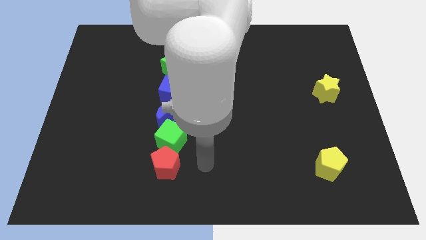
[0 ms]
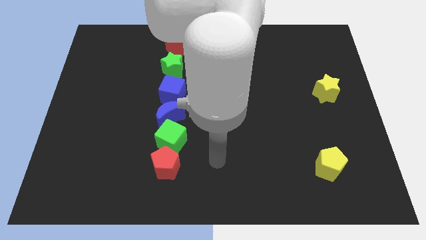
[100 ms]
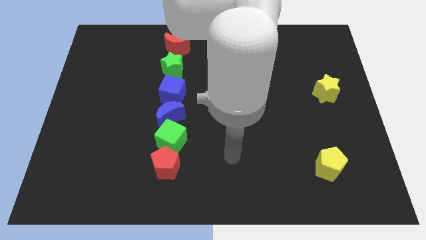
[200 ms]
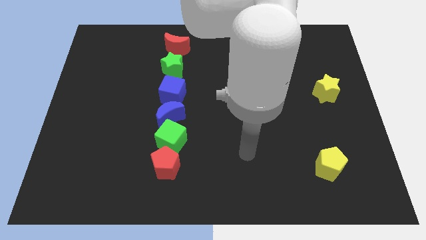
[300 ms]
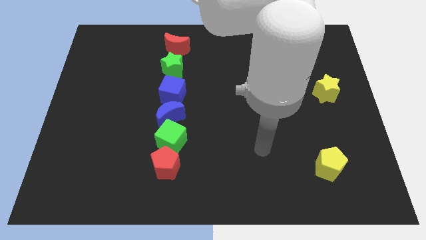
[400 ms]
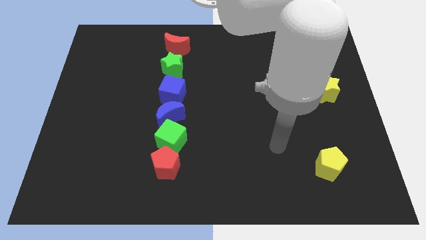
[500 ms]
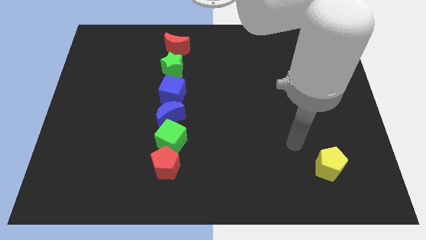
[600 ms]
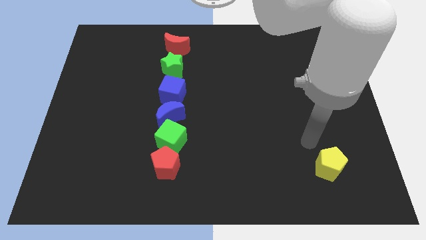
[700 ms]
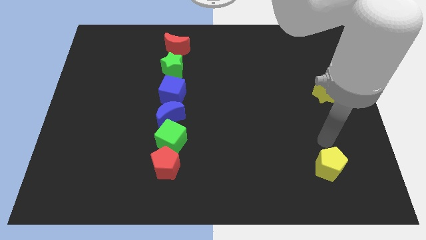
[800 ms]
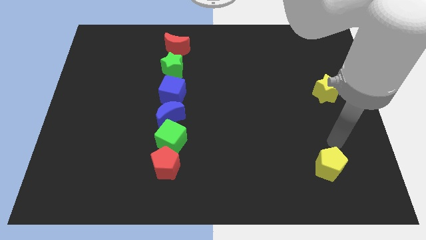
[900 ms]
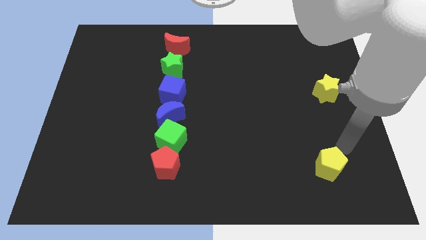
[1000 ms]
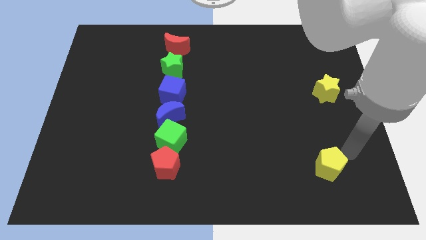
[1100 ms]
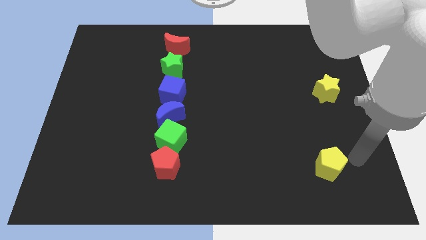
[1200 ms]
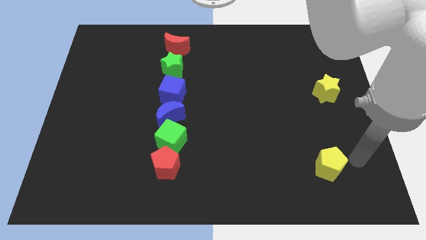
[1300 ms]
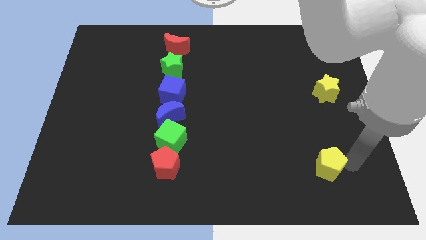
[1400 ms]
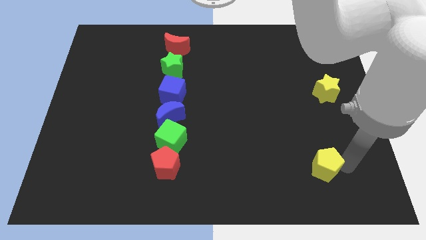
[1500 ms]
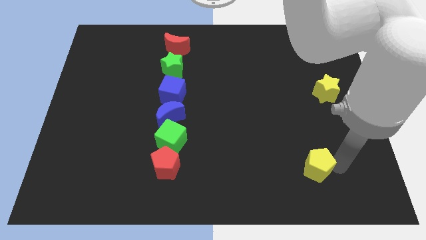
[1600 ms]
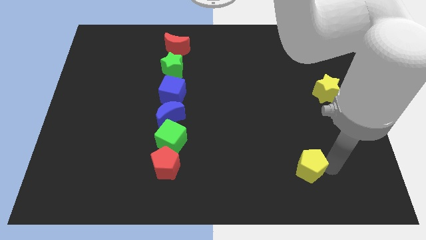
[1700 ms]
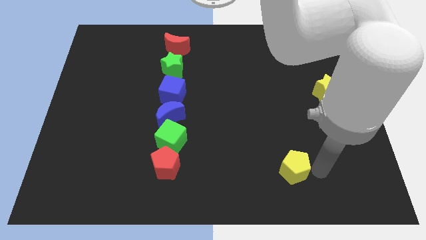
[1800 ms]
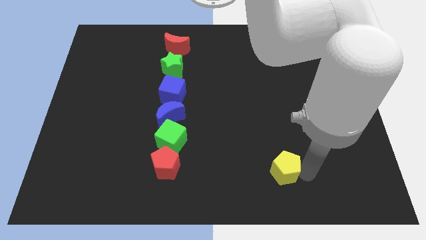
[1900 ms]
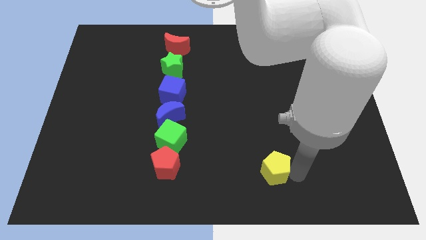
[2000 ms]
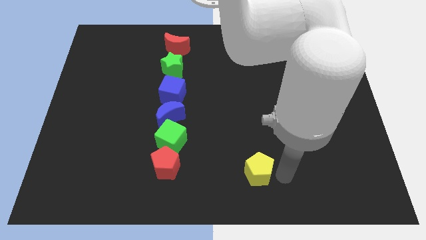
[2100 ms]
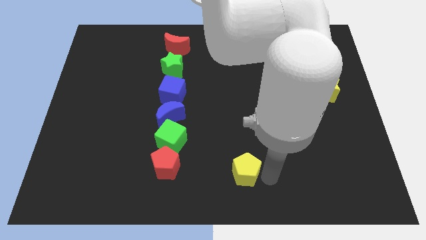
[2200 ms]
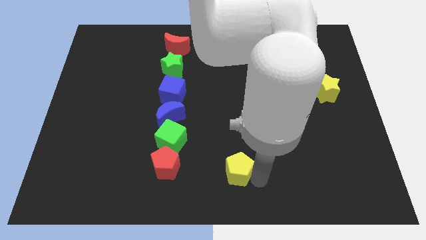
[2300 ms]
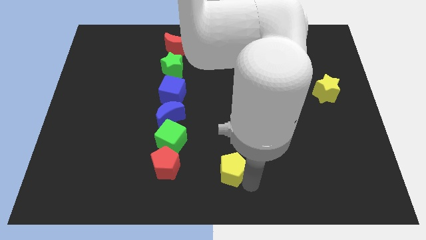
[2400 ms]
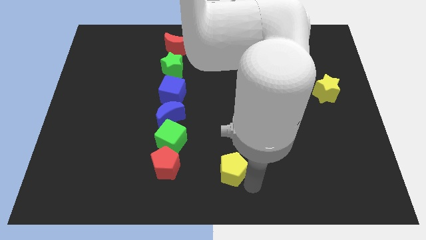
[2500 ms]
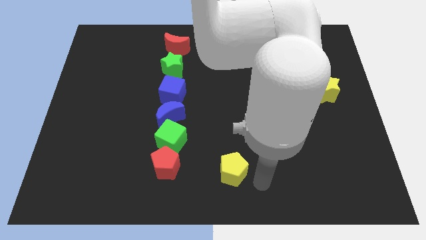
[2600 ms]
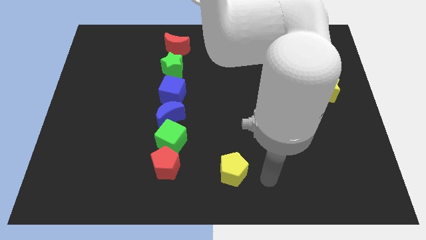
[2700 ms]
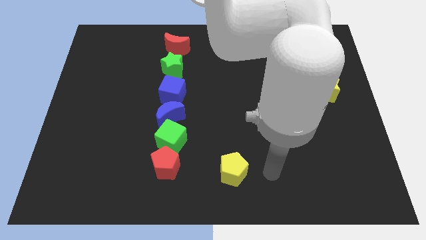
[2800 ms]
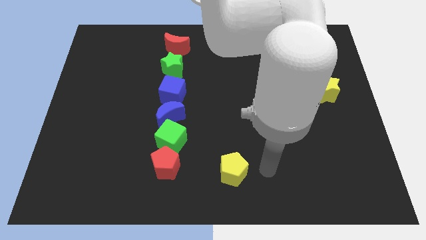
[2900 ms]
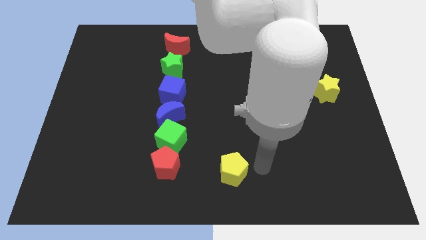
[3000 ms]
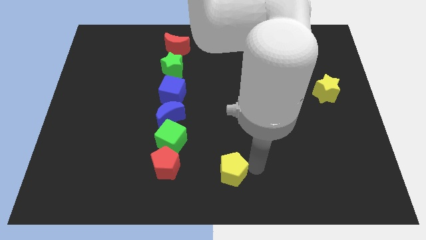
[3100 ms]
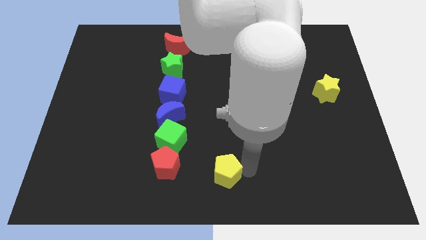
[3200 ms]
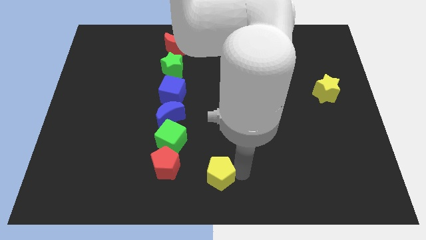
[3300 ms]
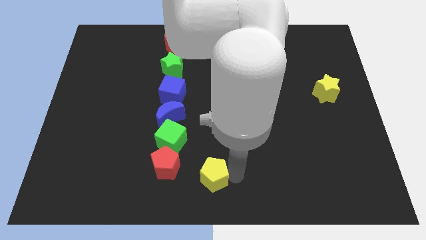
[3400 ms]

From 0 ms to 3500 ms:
push the yellow pentagon to the left of the board

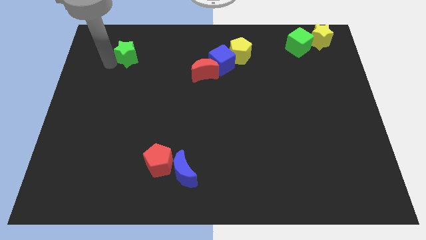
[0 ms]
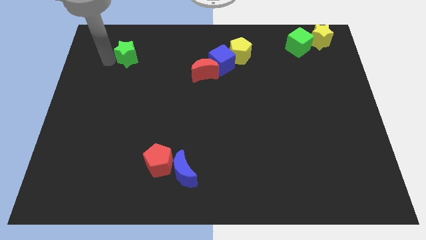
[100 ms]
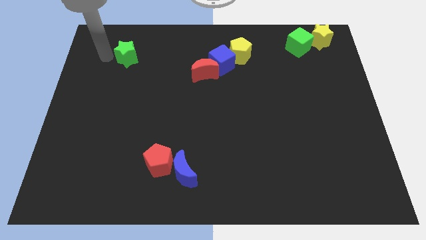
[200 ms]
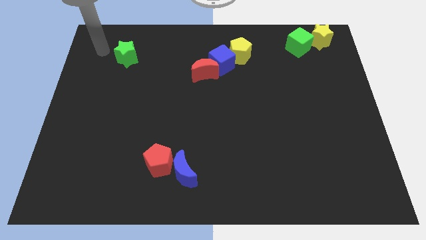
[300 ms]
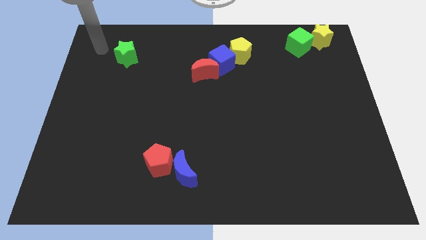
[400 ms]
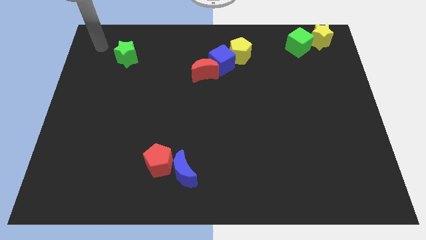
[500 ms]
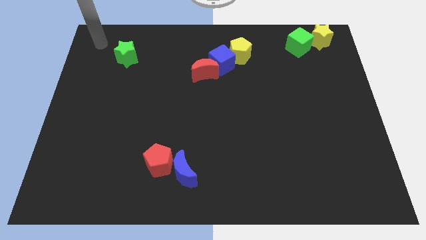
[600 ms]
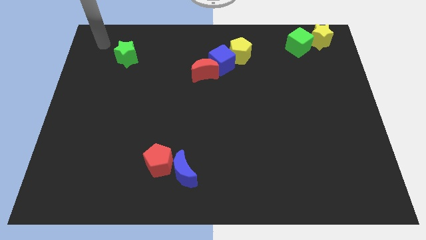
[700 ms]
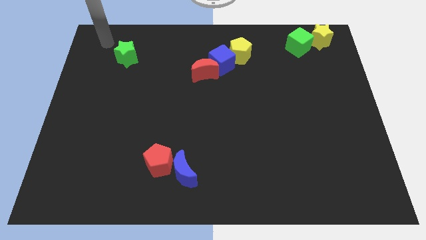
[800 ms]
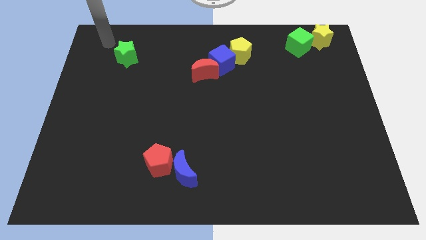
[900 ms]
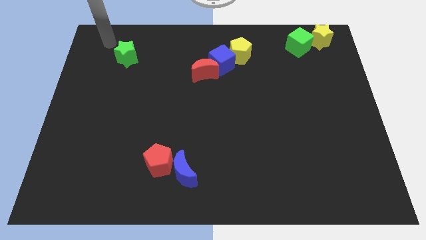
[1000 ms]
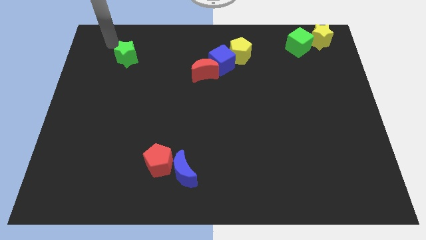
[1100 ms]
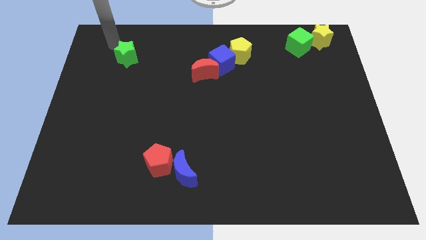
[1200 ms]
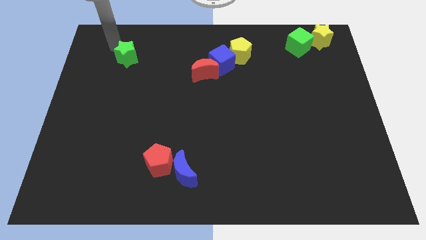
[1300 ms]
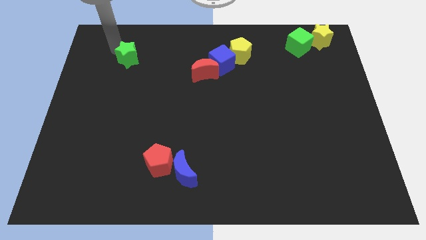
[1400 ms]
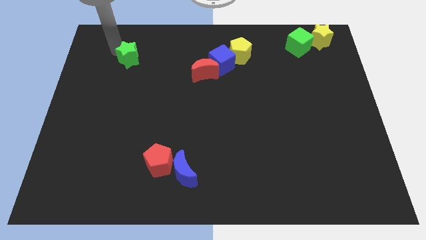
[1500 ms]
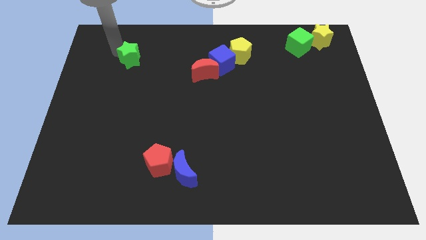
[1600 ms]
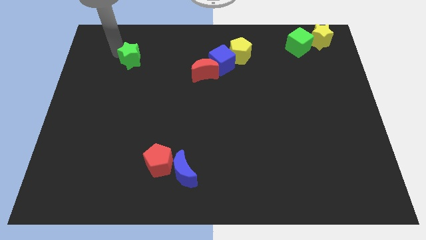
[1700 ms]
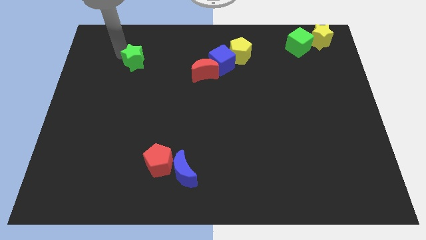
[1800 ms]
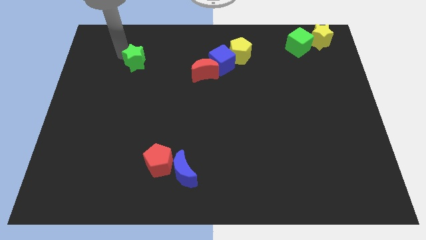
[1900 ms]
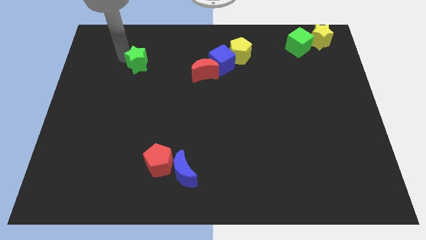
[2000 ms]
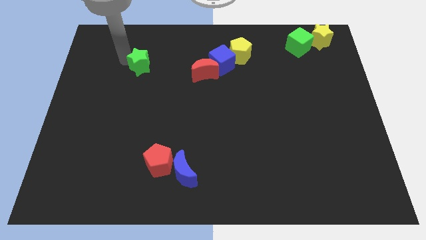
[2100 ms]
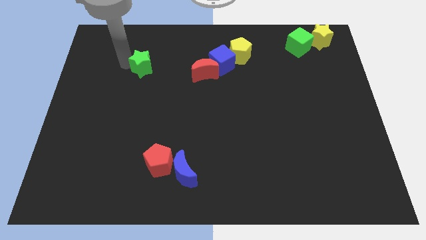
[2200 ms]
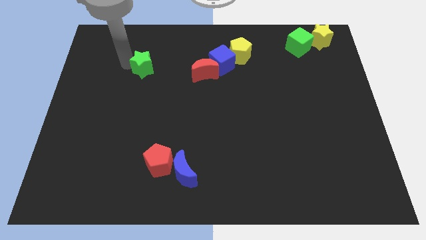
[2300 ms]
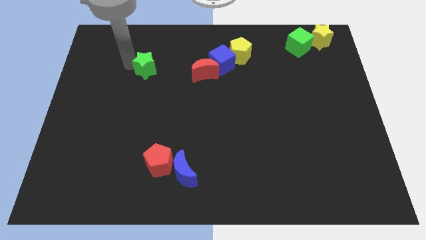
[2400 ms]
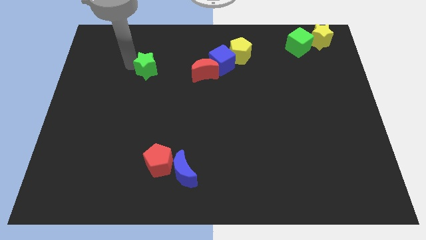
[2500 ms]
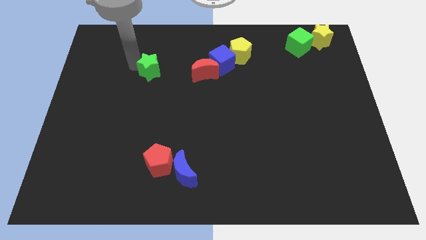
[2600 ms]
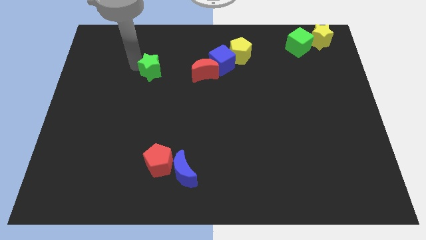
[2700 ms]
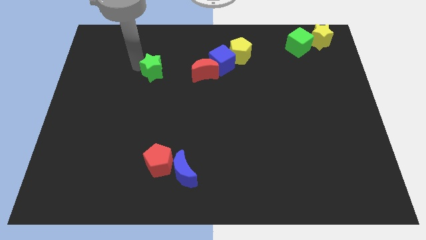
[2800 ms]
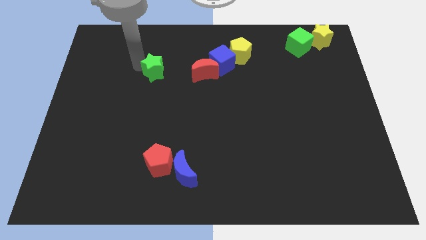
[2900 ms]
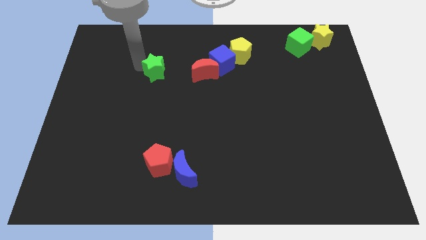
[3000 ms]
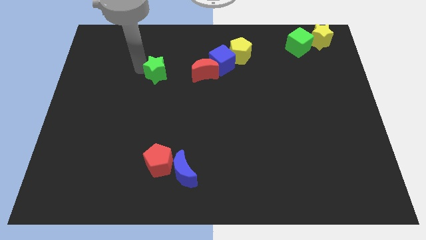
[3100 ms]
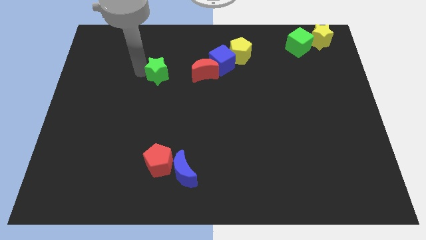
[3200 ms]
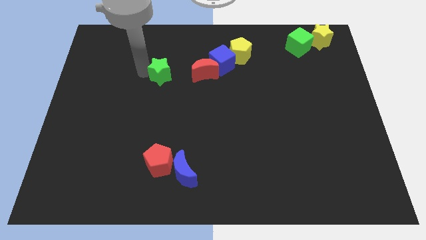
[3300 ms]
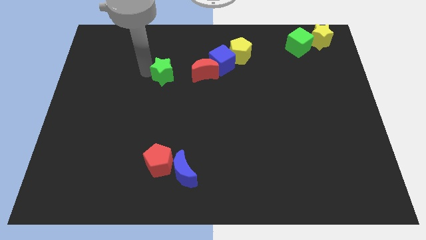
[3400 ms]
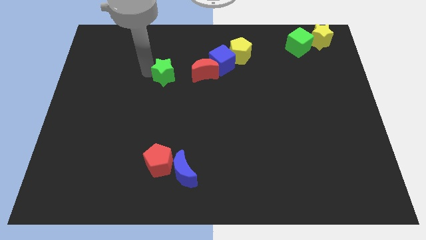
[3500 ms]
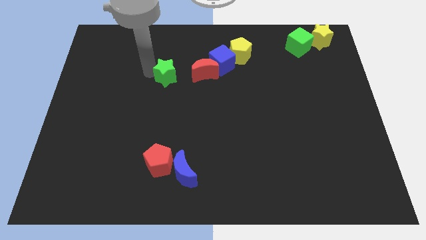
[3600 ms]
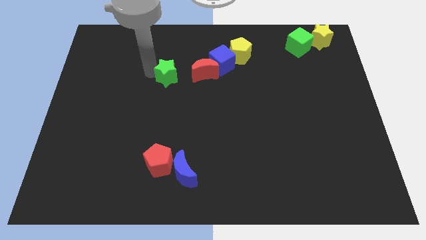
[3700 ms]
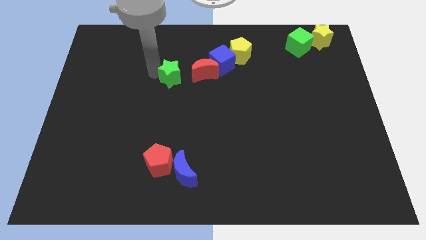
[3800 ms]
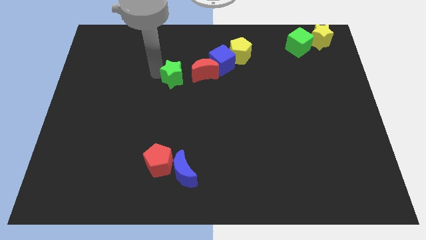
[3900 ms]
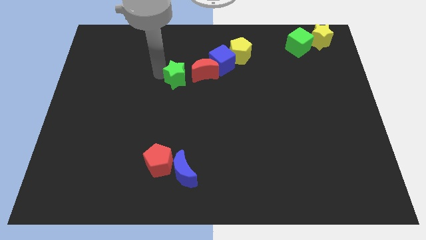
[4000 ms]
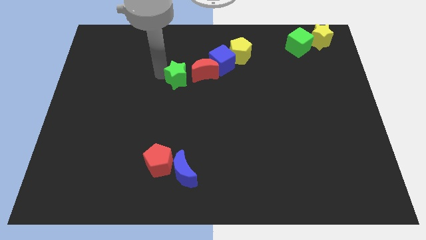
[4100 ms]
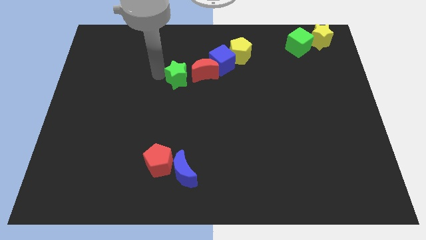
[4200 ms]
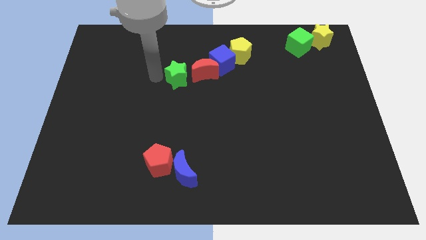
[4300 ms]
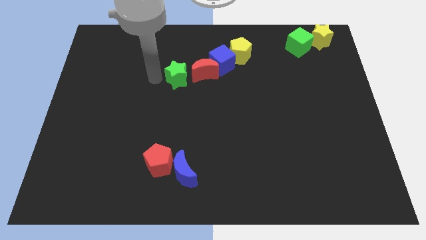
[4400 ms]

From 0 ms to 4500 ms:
push the green star to the left of the red crescent

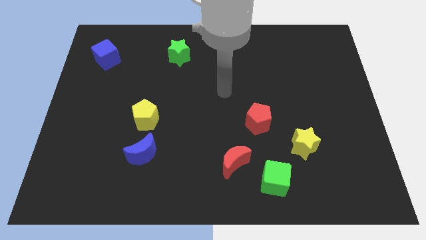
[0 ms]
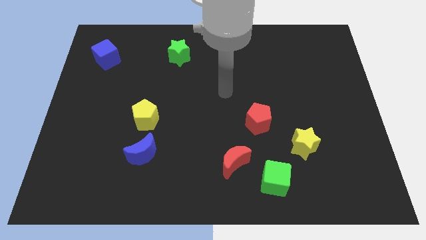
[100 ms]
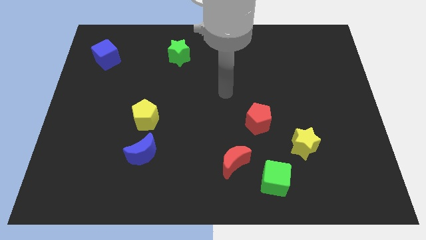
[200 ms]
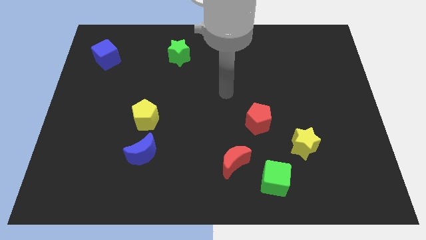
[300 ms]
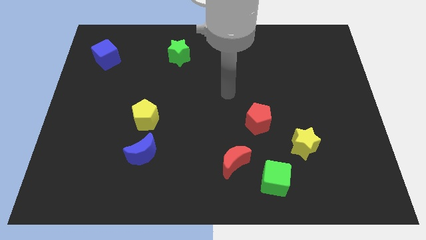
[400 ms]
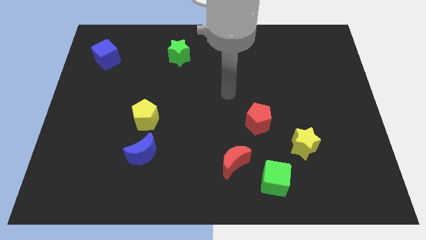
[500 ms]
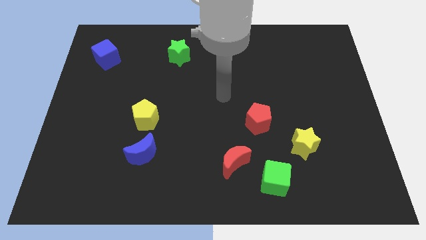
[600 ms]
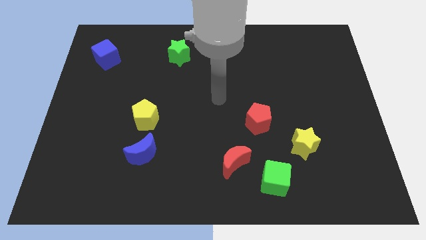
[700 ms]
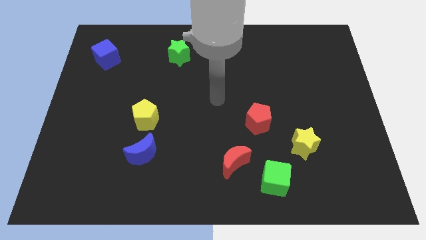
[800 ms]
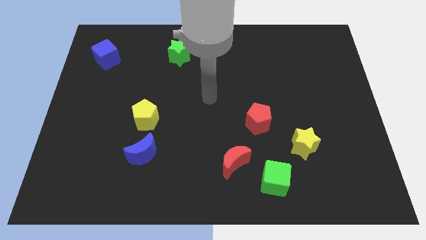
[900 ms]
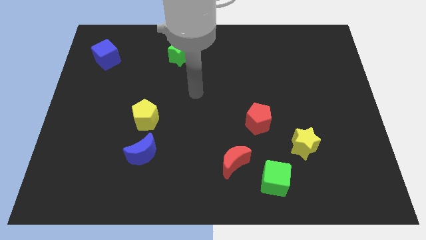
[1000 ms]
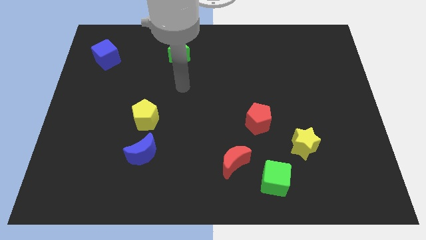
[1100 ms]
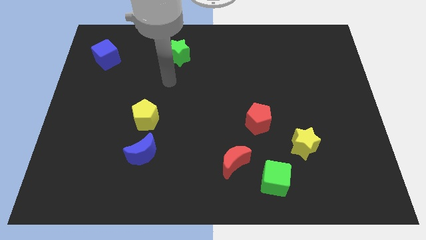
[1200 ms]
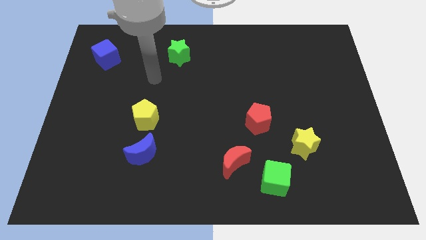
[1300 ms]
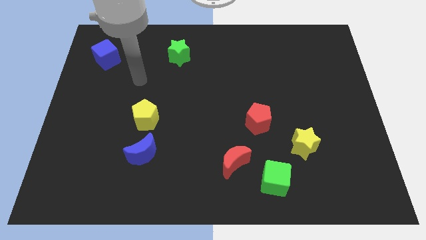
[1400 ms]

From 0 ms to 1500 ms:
place your hand at the top of the yellow pentagon
